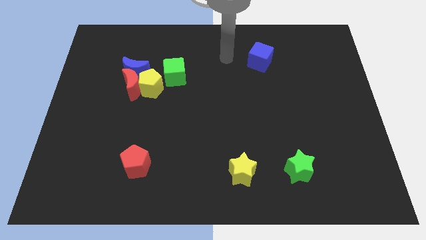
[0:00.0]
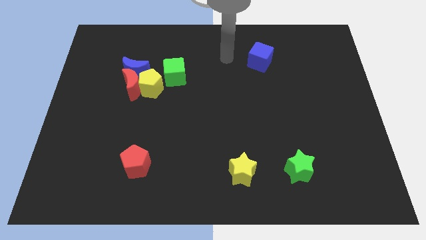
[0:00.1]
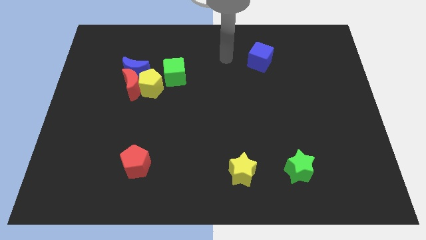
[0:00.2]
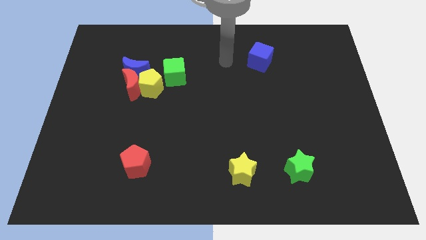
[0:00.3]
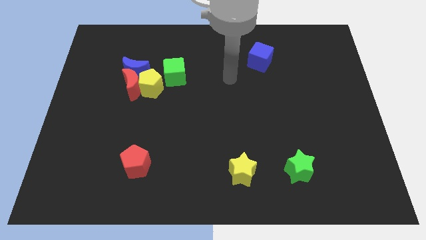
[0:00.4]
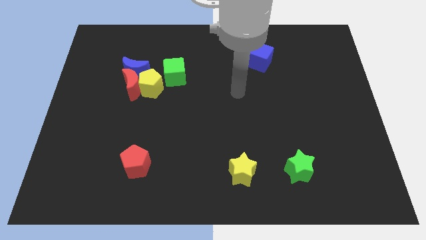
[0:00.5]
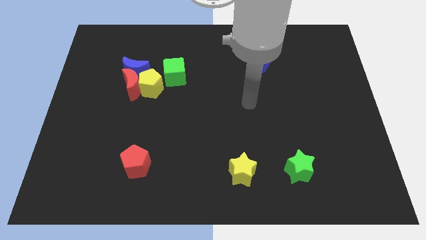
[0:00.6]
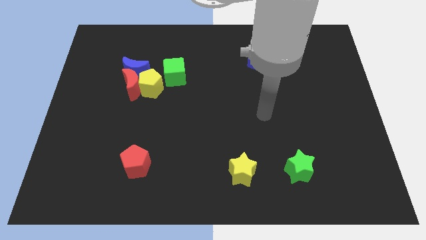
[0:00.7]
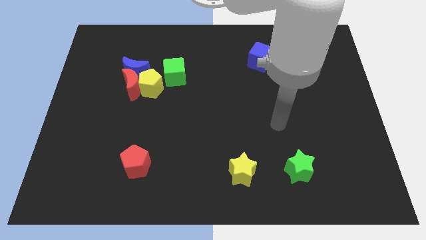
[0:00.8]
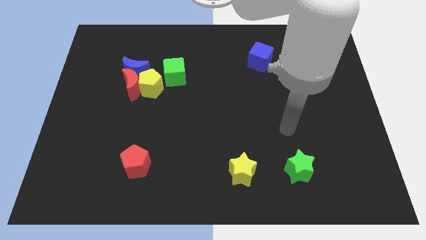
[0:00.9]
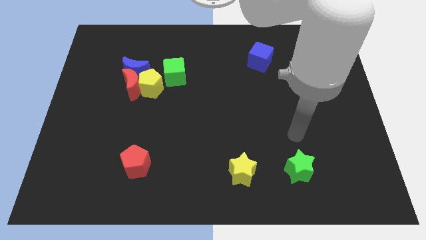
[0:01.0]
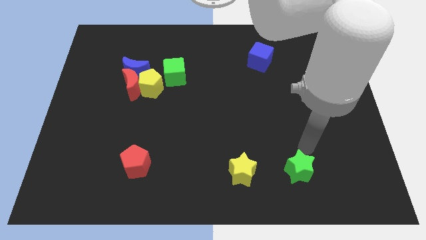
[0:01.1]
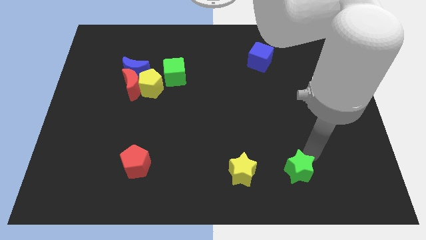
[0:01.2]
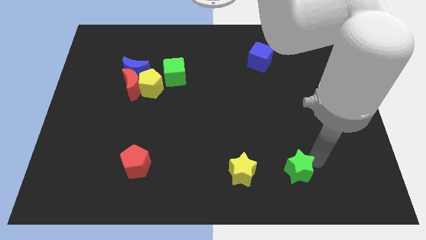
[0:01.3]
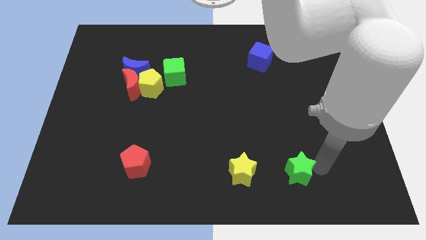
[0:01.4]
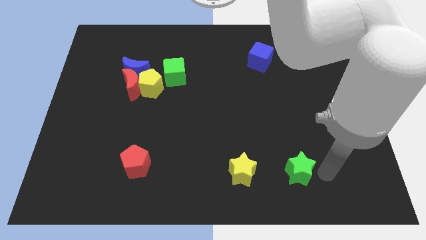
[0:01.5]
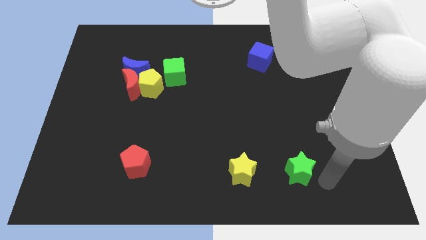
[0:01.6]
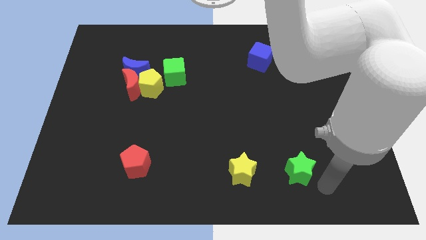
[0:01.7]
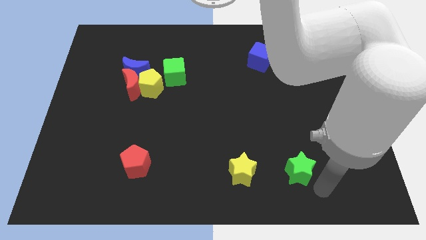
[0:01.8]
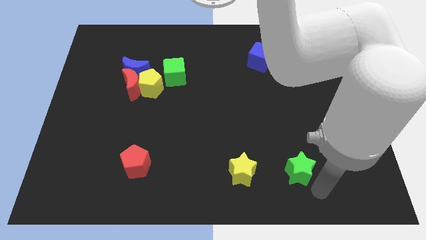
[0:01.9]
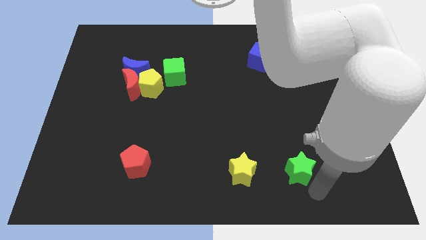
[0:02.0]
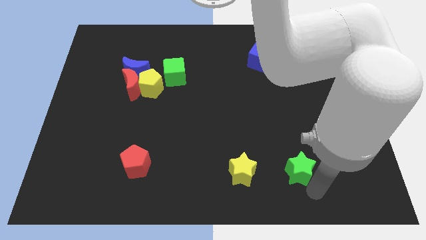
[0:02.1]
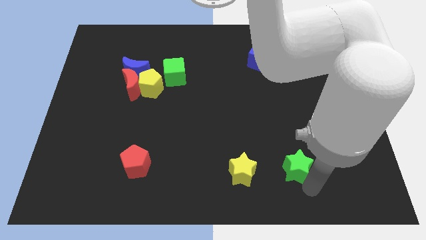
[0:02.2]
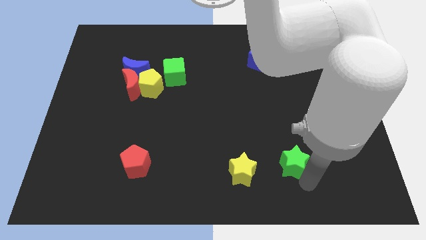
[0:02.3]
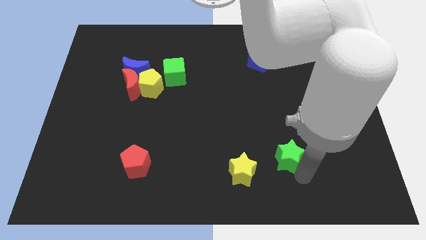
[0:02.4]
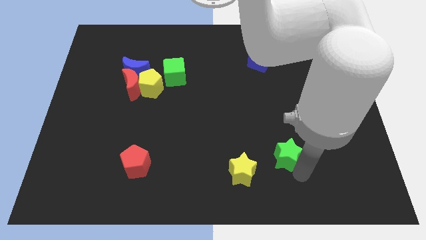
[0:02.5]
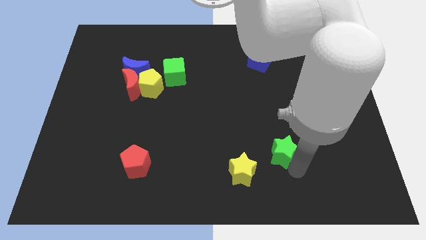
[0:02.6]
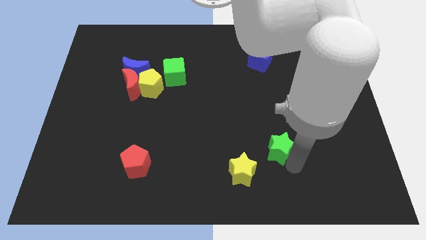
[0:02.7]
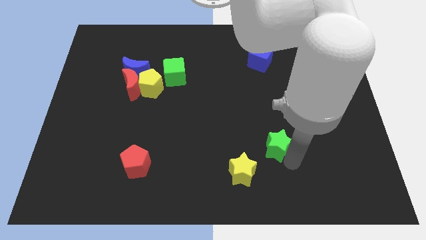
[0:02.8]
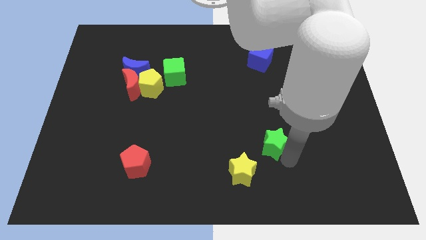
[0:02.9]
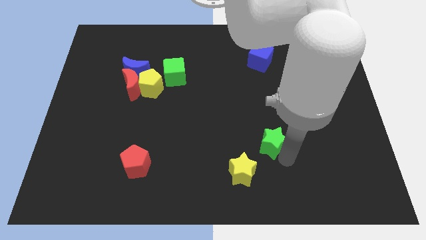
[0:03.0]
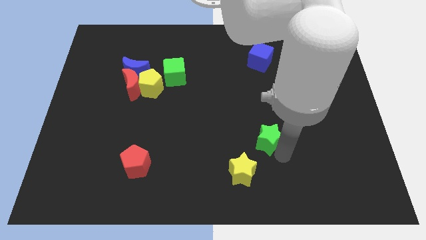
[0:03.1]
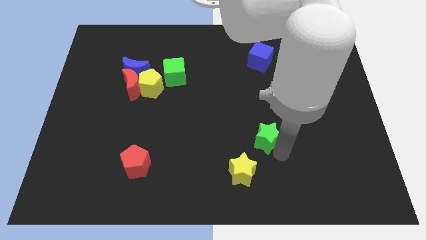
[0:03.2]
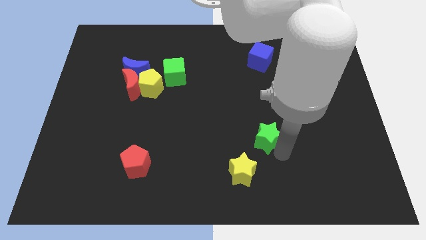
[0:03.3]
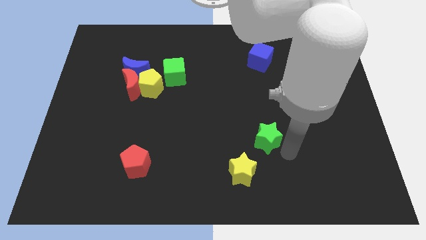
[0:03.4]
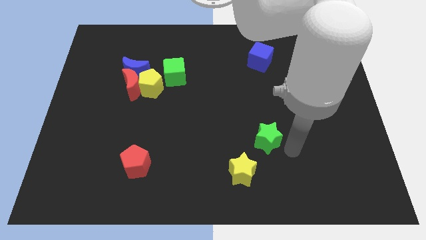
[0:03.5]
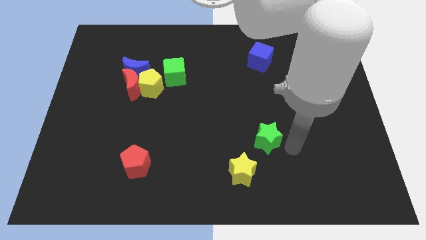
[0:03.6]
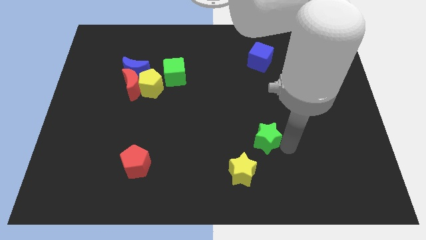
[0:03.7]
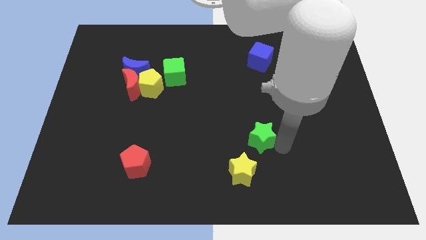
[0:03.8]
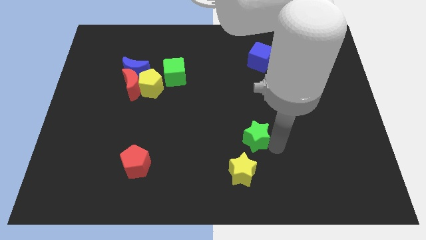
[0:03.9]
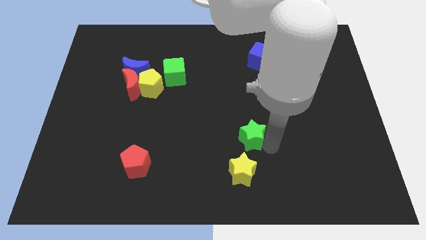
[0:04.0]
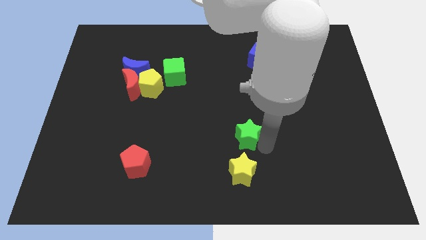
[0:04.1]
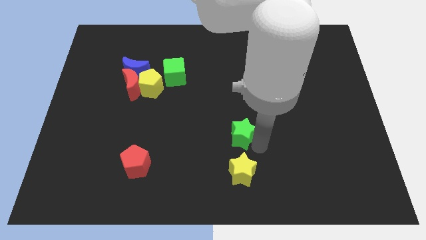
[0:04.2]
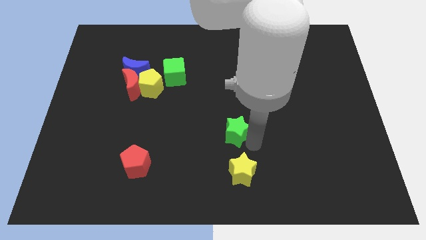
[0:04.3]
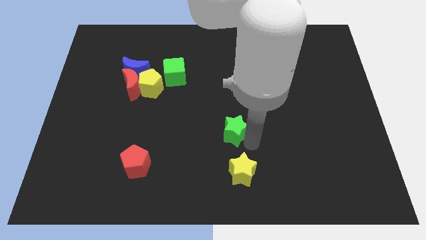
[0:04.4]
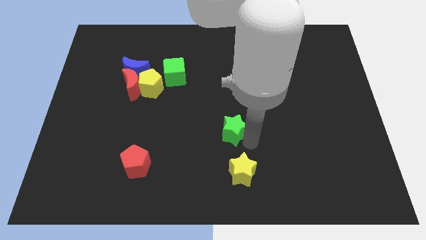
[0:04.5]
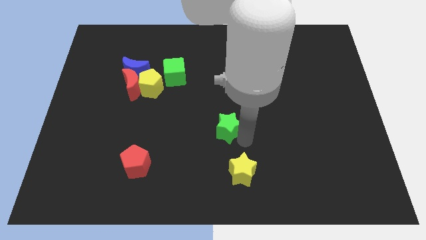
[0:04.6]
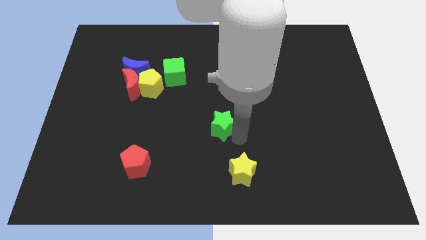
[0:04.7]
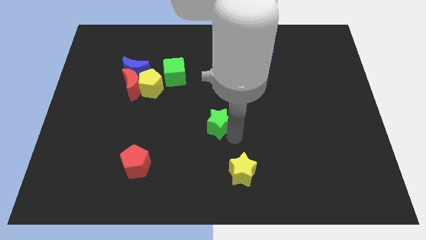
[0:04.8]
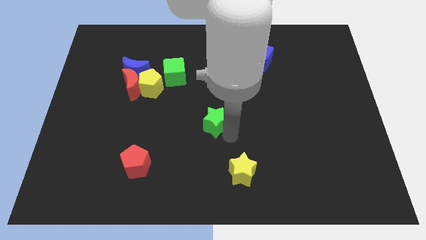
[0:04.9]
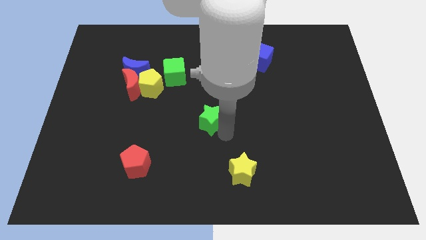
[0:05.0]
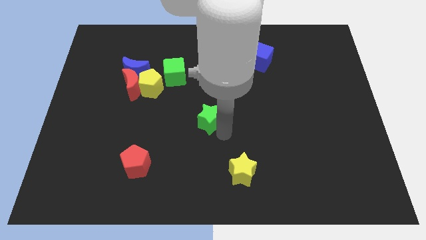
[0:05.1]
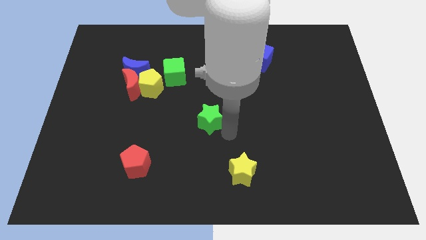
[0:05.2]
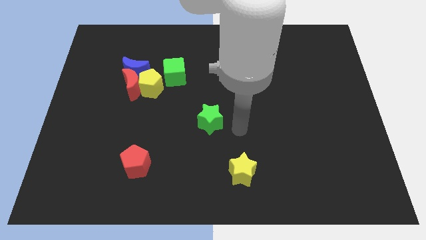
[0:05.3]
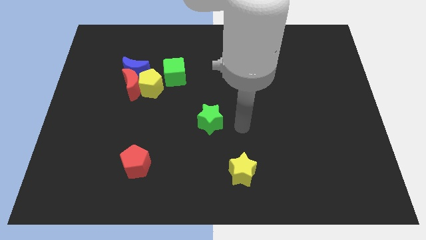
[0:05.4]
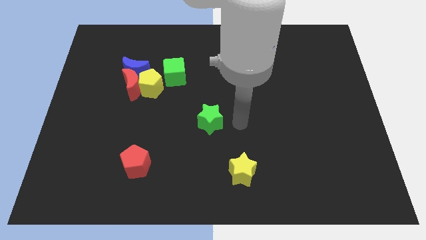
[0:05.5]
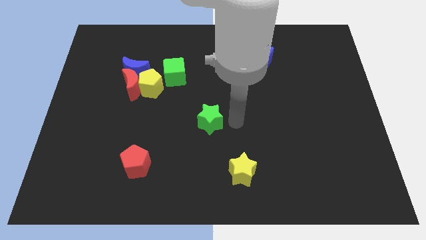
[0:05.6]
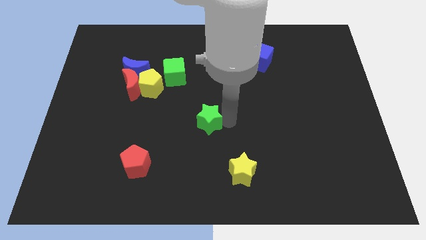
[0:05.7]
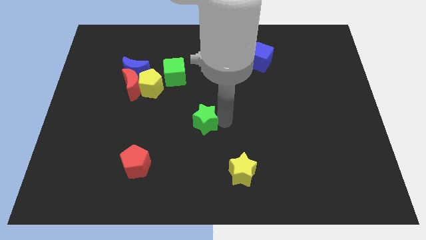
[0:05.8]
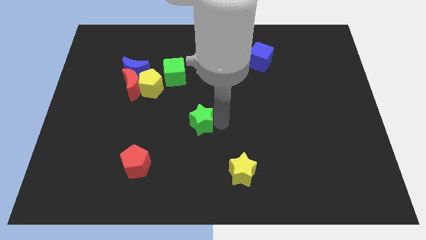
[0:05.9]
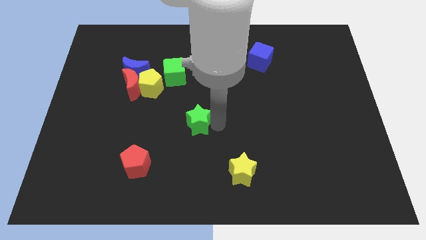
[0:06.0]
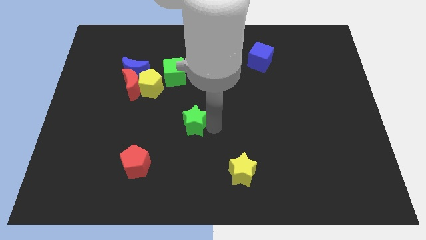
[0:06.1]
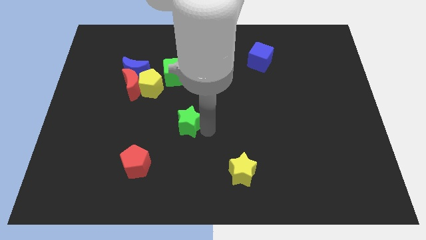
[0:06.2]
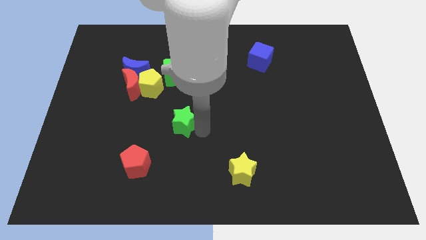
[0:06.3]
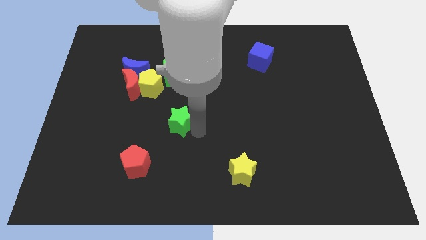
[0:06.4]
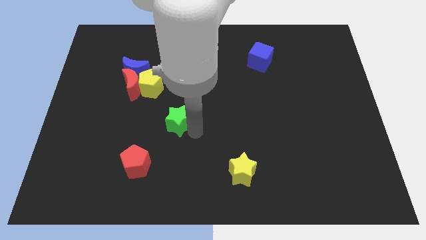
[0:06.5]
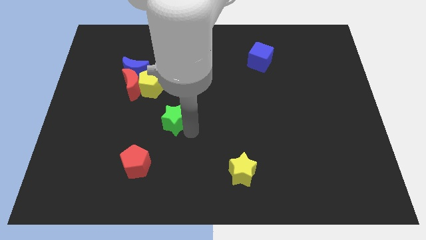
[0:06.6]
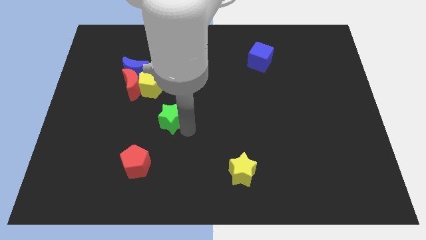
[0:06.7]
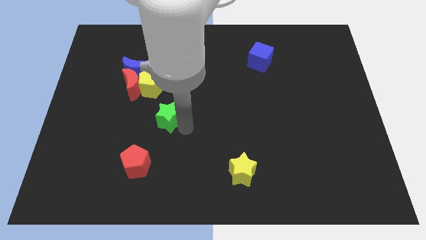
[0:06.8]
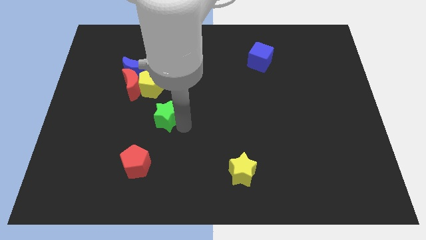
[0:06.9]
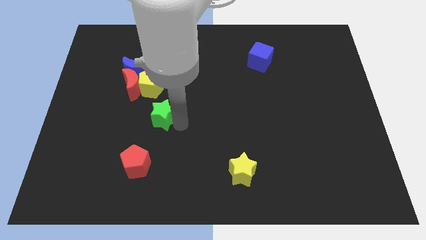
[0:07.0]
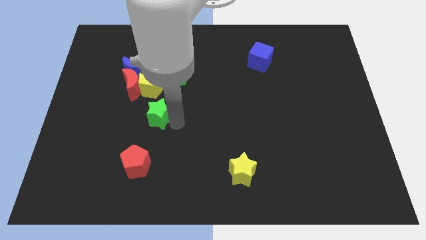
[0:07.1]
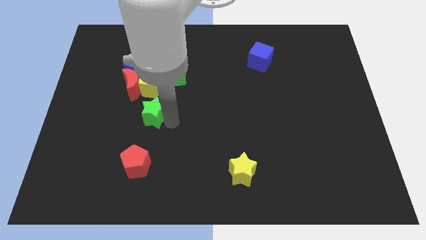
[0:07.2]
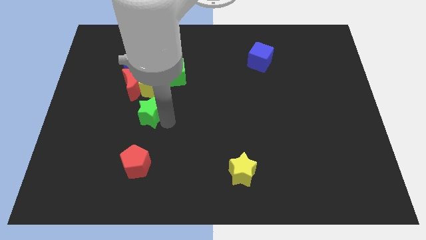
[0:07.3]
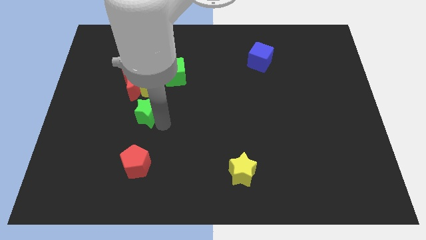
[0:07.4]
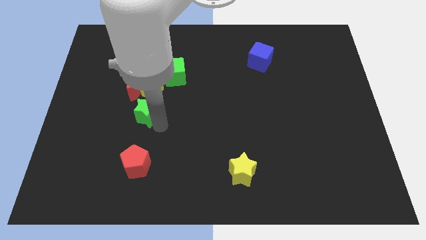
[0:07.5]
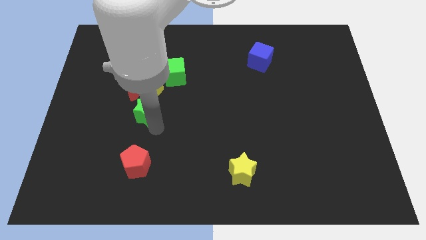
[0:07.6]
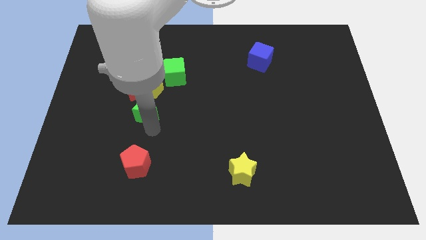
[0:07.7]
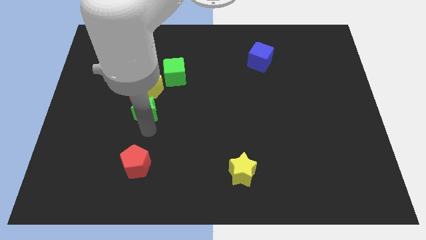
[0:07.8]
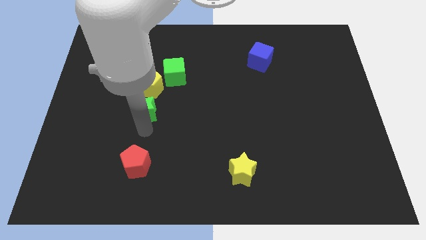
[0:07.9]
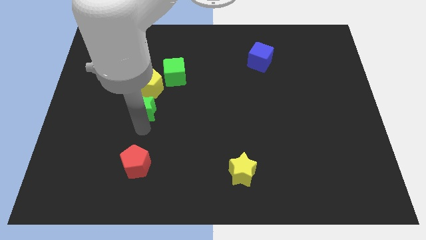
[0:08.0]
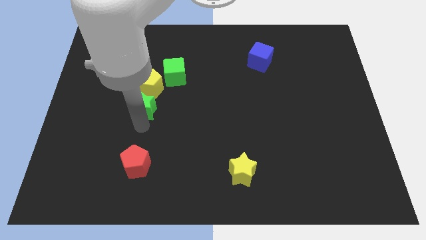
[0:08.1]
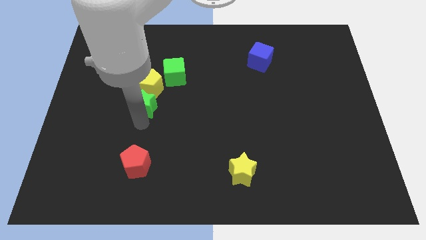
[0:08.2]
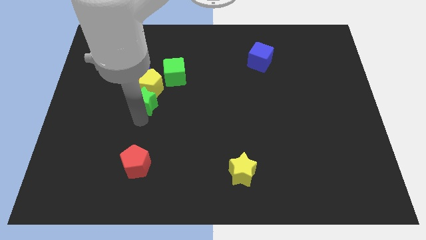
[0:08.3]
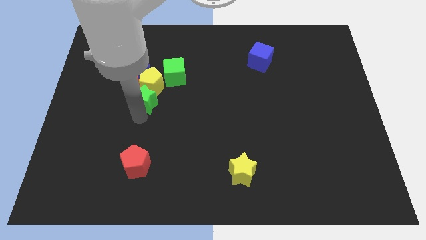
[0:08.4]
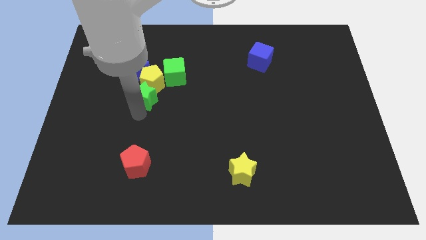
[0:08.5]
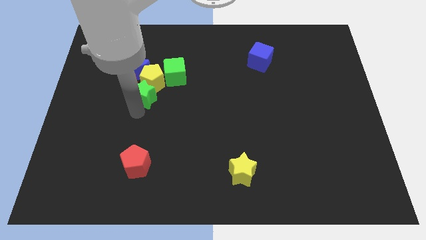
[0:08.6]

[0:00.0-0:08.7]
push the green star close to the red moon
